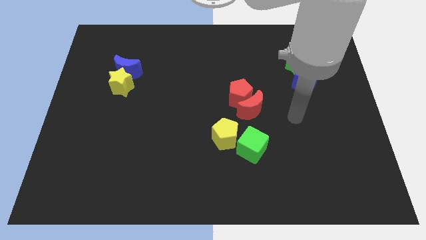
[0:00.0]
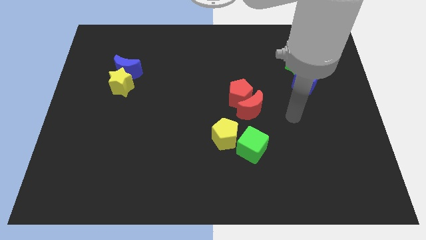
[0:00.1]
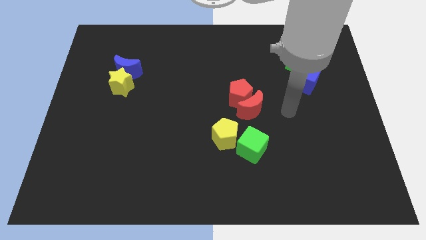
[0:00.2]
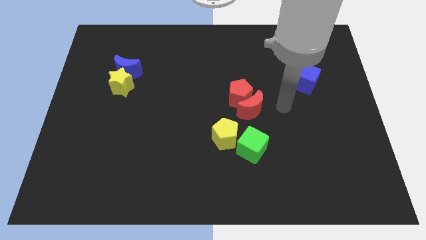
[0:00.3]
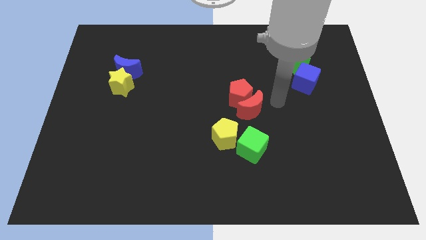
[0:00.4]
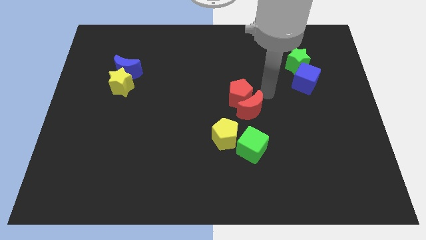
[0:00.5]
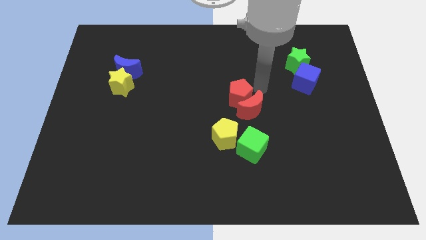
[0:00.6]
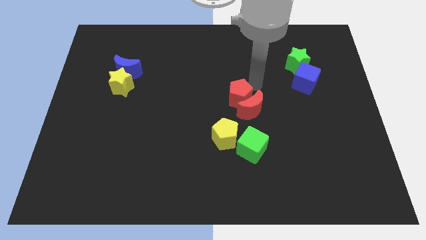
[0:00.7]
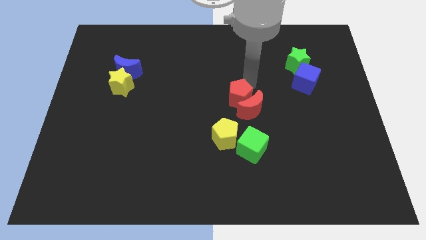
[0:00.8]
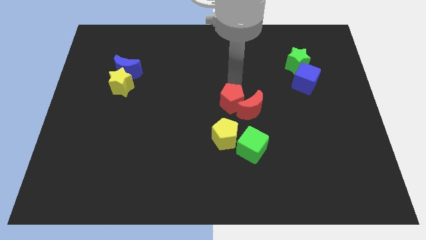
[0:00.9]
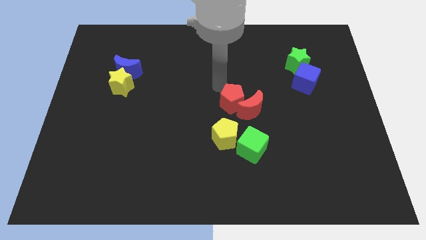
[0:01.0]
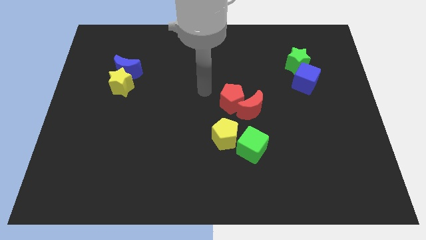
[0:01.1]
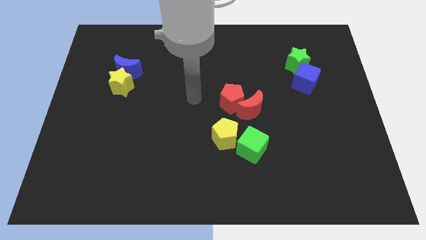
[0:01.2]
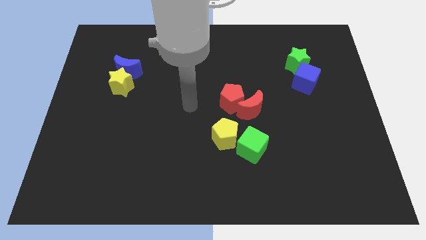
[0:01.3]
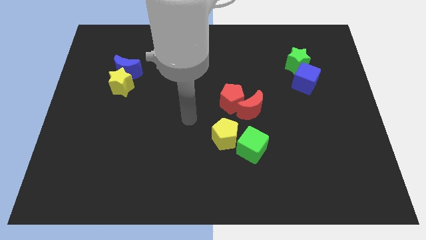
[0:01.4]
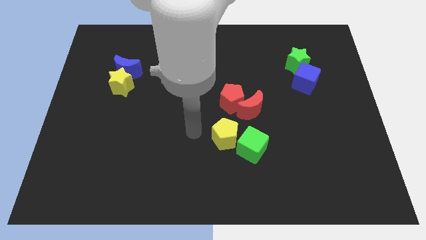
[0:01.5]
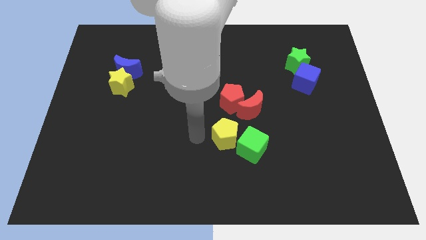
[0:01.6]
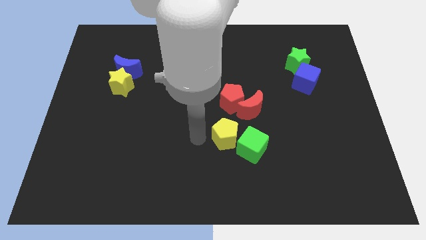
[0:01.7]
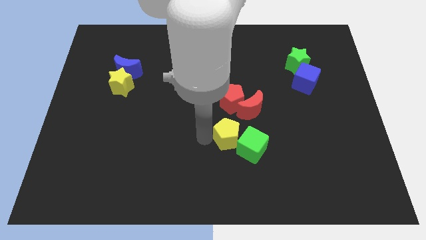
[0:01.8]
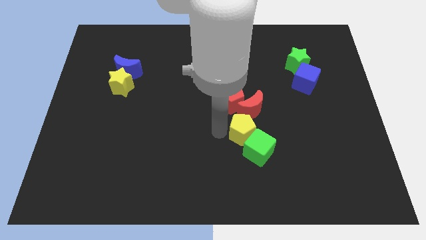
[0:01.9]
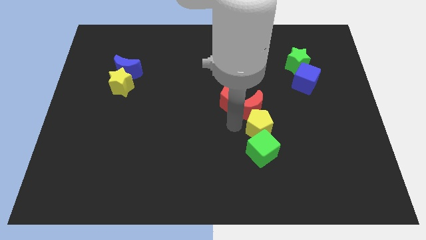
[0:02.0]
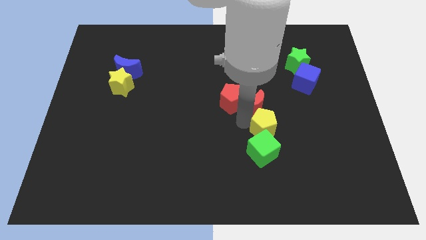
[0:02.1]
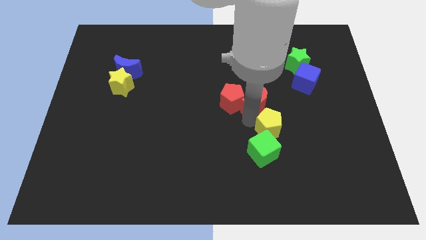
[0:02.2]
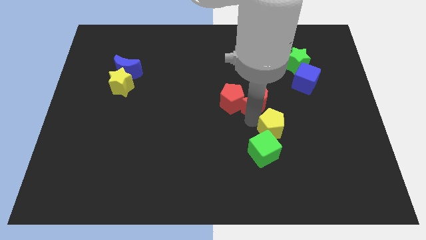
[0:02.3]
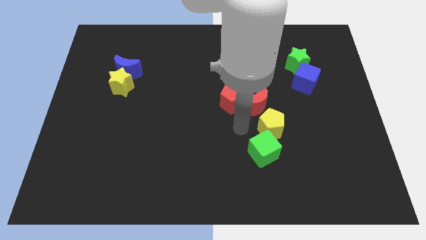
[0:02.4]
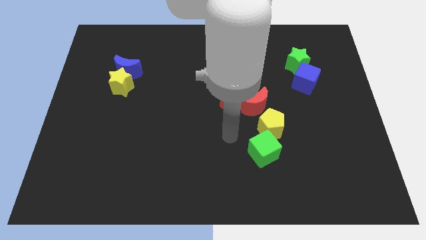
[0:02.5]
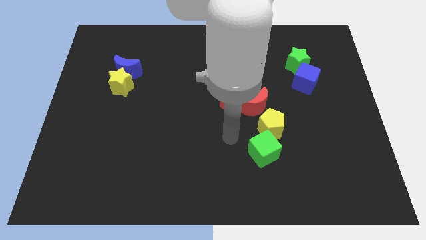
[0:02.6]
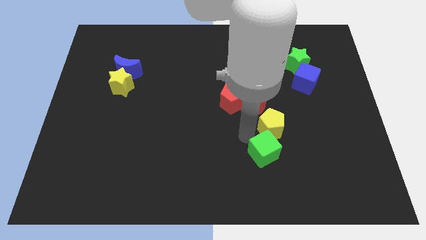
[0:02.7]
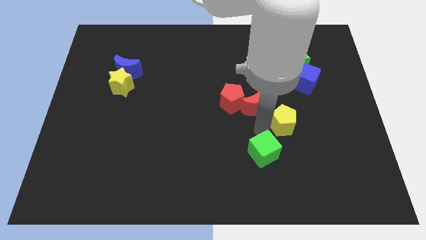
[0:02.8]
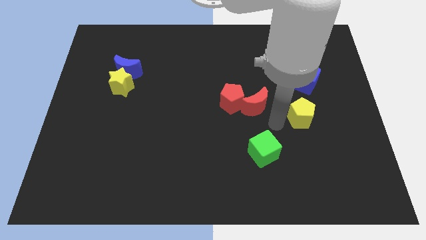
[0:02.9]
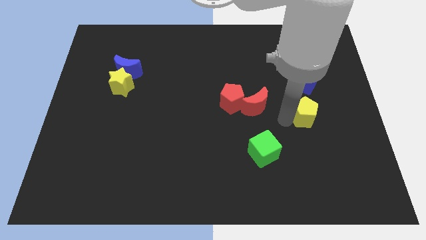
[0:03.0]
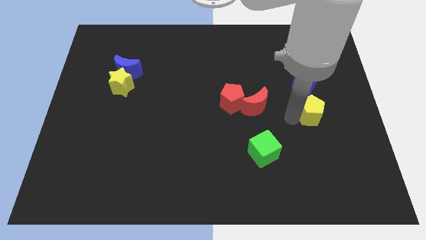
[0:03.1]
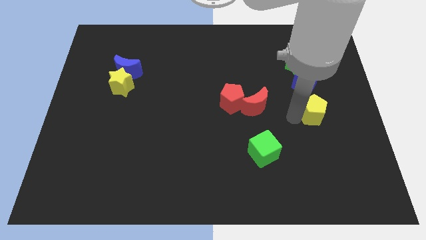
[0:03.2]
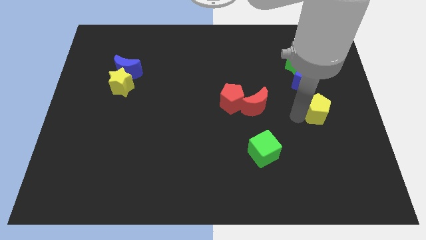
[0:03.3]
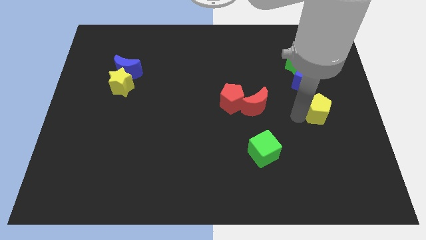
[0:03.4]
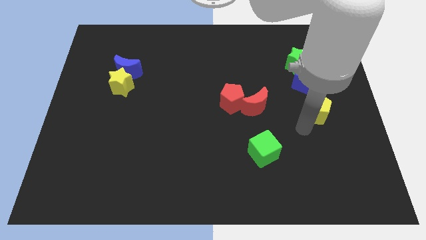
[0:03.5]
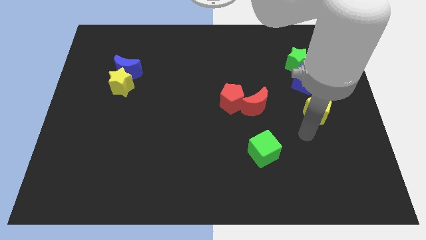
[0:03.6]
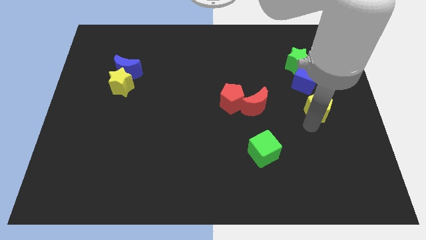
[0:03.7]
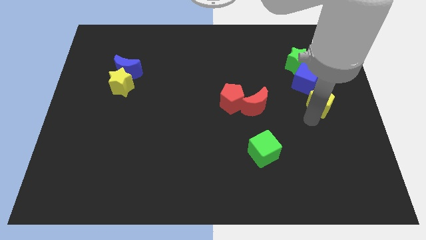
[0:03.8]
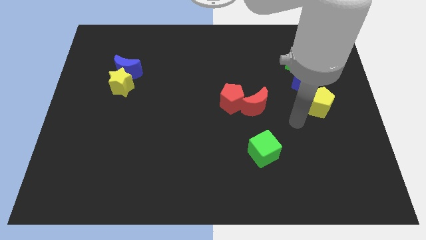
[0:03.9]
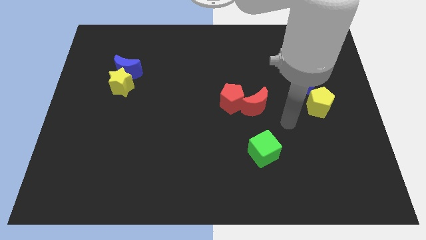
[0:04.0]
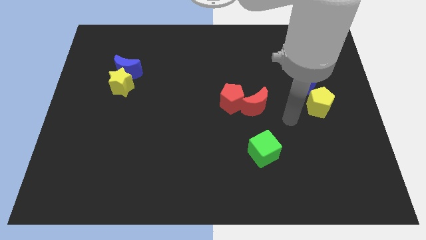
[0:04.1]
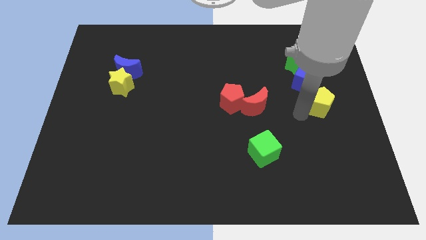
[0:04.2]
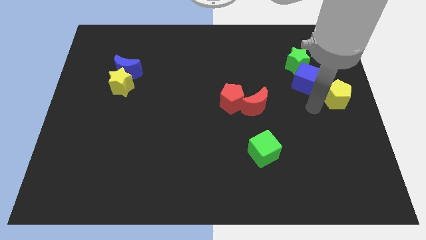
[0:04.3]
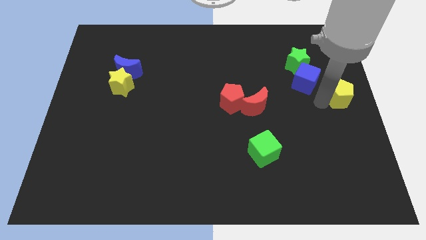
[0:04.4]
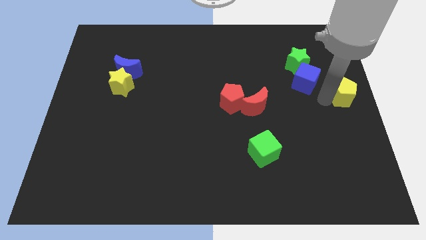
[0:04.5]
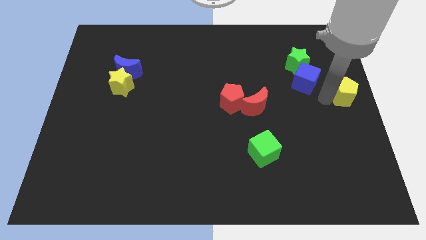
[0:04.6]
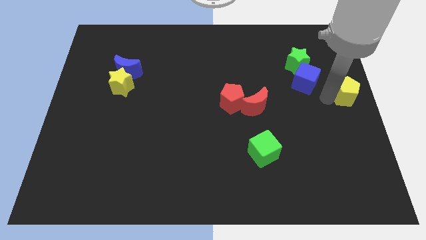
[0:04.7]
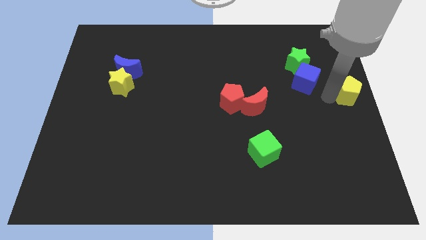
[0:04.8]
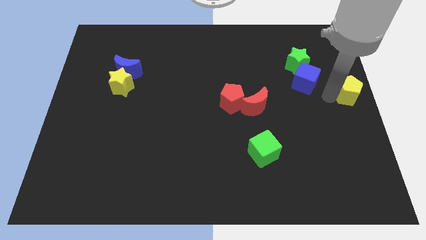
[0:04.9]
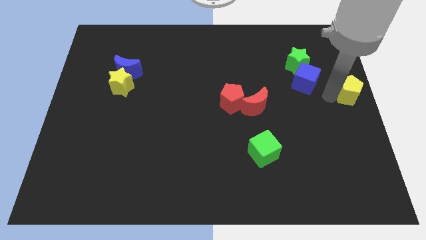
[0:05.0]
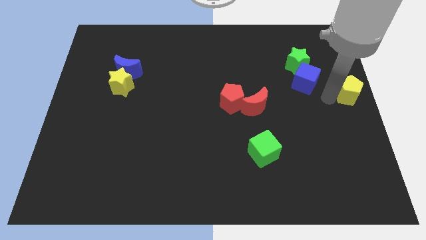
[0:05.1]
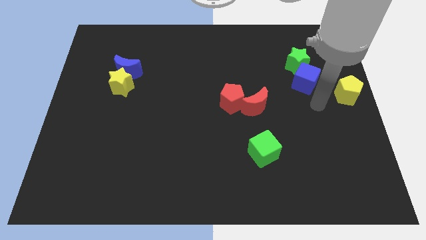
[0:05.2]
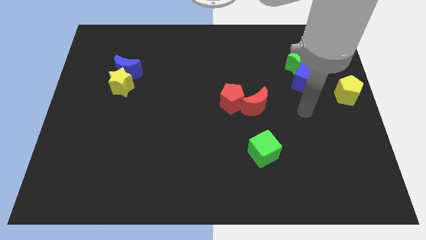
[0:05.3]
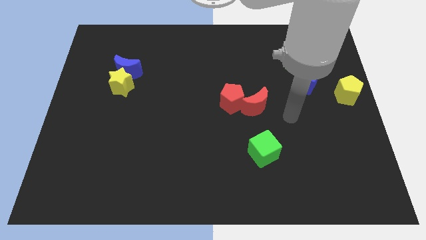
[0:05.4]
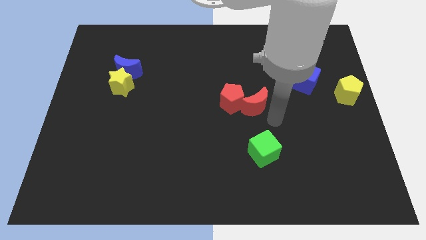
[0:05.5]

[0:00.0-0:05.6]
push the yellow pentagon towards the right

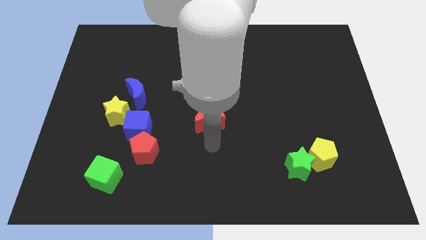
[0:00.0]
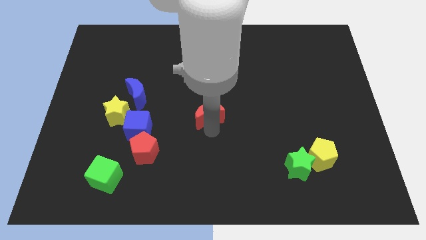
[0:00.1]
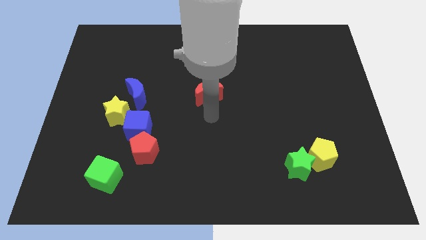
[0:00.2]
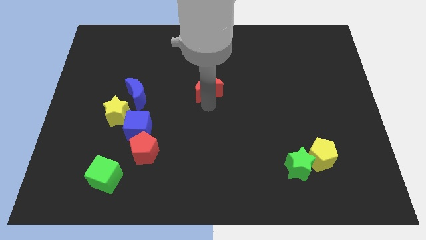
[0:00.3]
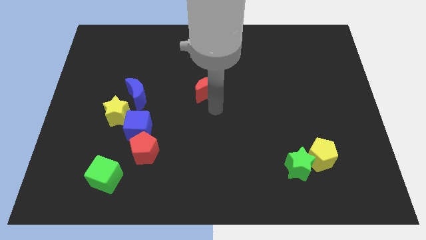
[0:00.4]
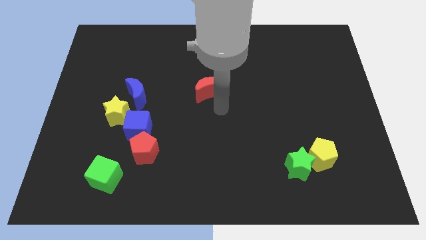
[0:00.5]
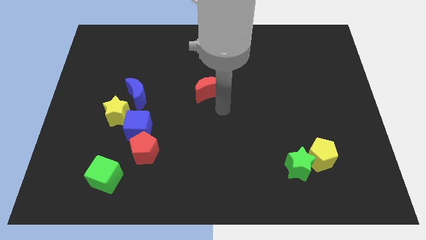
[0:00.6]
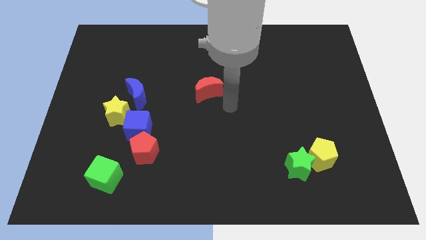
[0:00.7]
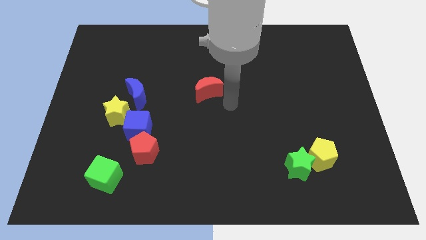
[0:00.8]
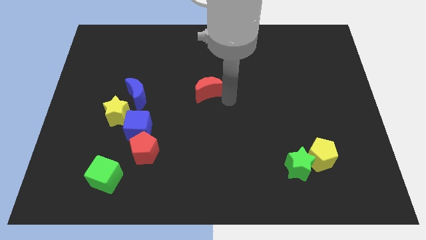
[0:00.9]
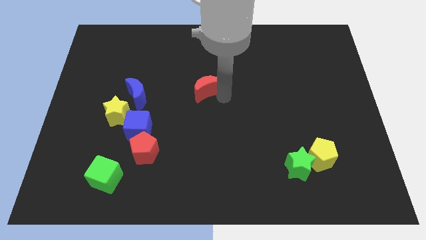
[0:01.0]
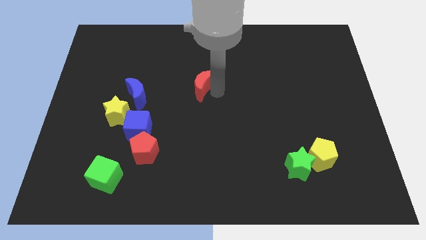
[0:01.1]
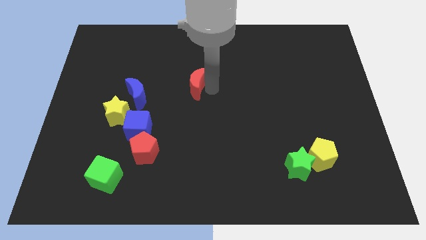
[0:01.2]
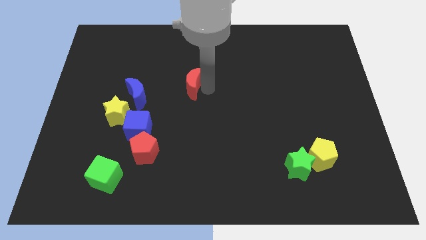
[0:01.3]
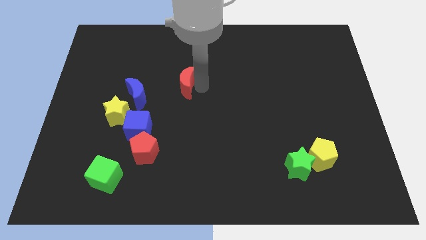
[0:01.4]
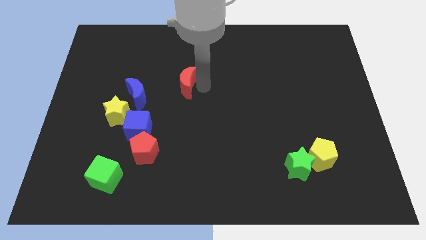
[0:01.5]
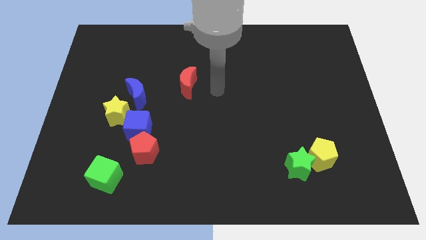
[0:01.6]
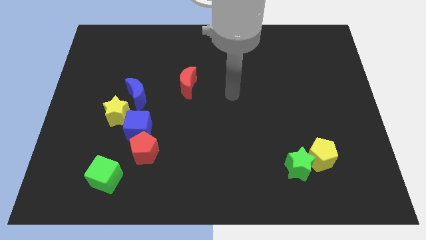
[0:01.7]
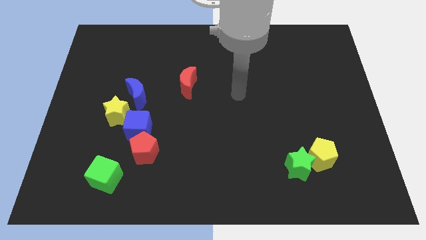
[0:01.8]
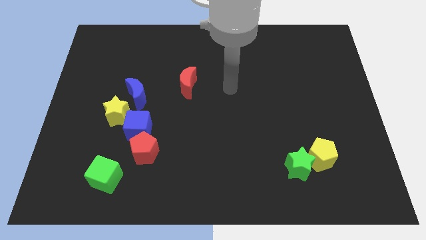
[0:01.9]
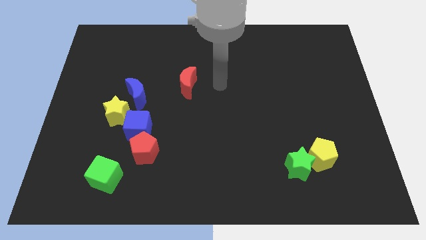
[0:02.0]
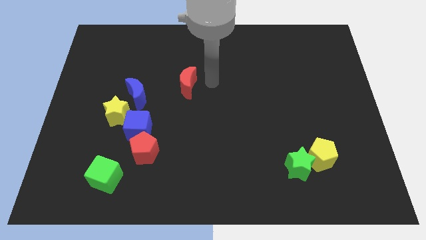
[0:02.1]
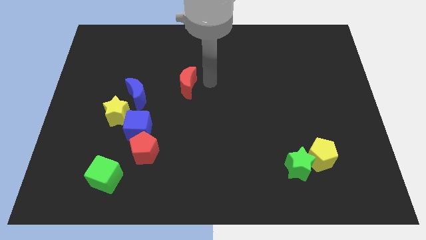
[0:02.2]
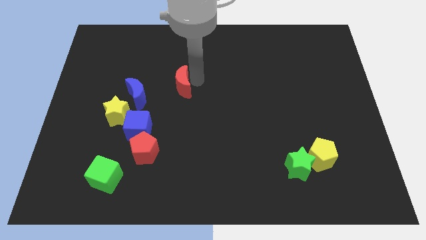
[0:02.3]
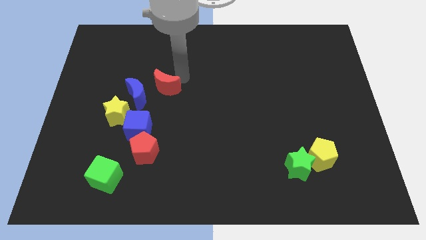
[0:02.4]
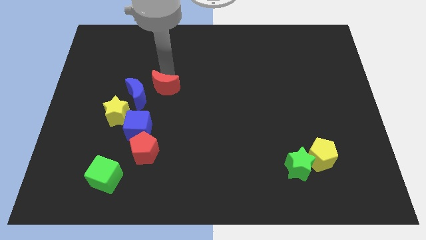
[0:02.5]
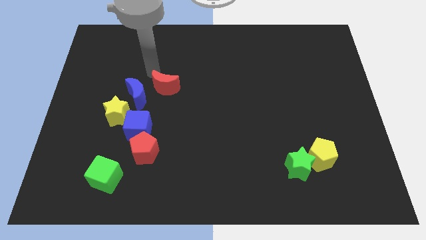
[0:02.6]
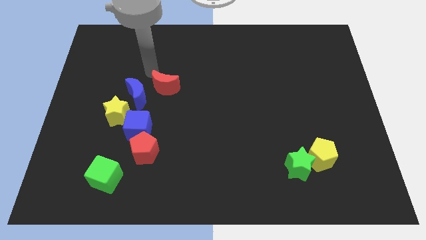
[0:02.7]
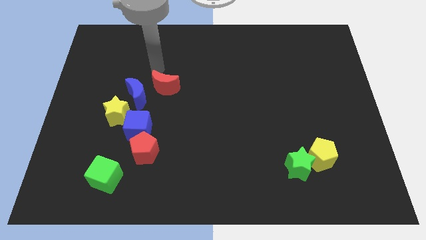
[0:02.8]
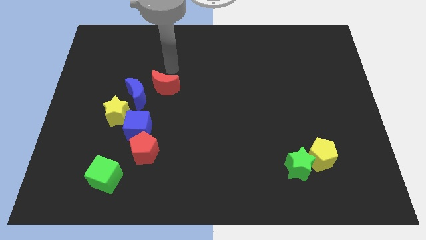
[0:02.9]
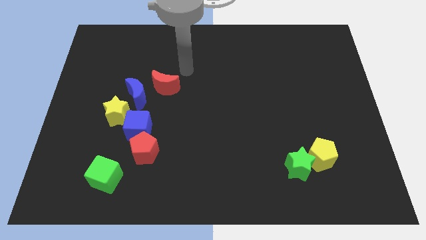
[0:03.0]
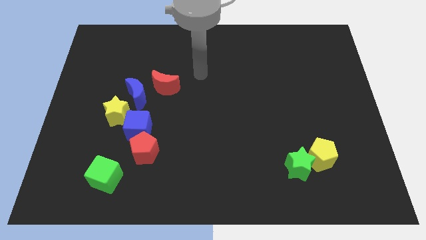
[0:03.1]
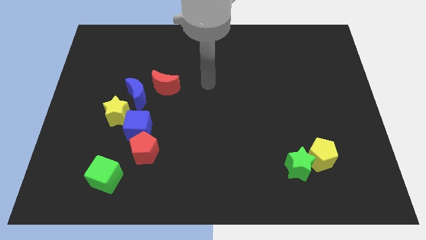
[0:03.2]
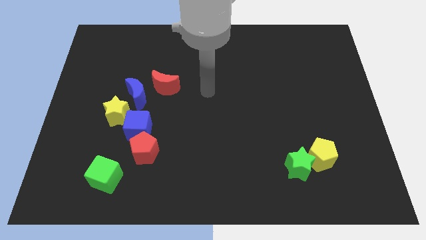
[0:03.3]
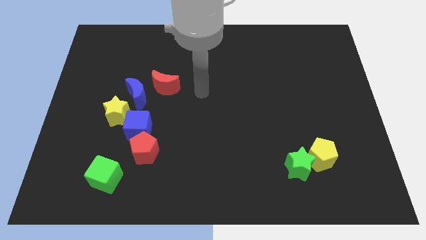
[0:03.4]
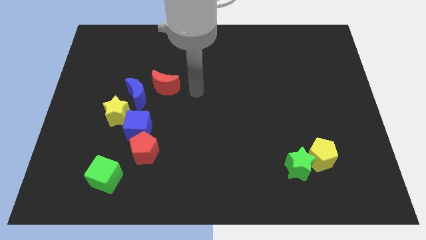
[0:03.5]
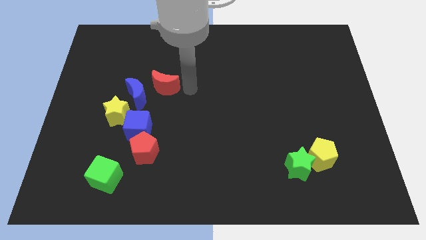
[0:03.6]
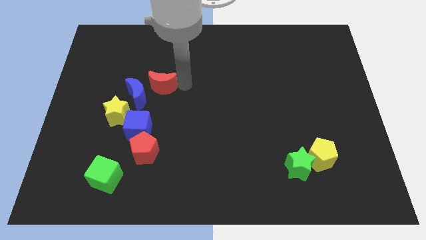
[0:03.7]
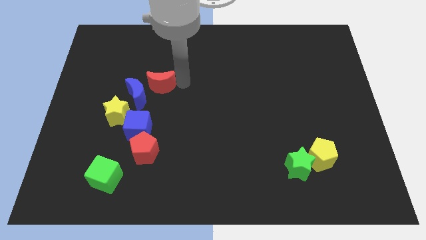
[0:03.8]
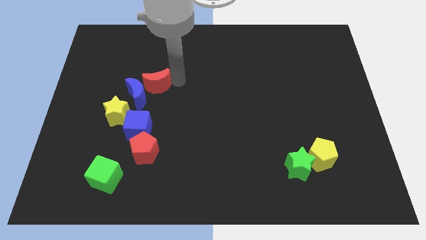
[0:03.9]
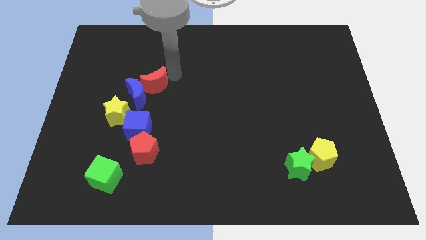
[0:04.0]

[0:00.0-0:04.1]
move red crescent towards the blue crescent
